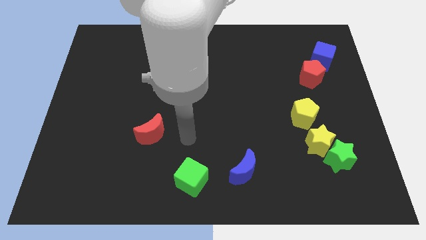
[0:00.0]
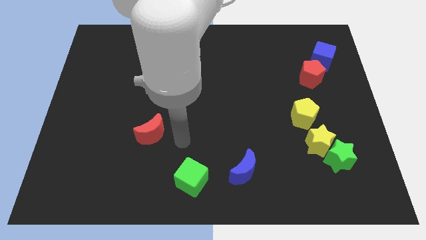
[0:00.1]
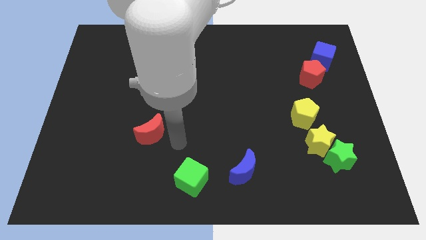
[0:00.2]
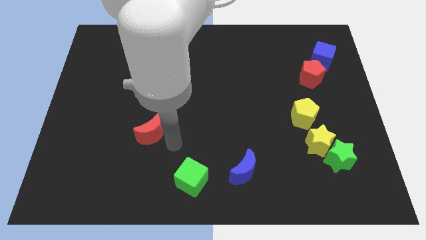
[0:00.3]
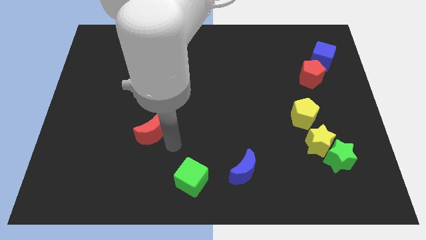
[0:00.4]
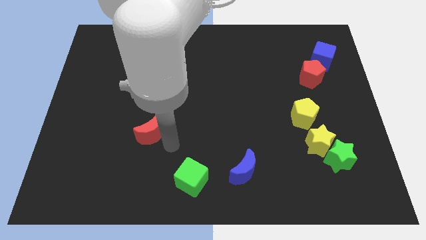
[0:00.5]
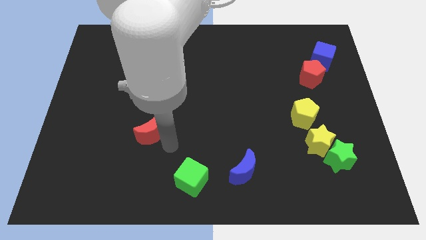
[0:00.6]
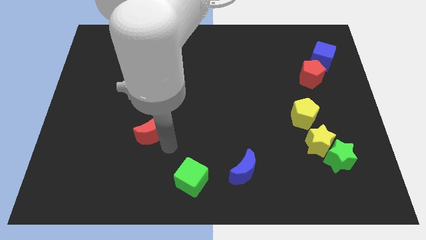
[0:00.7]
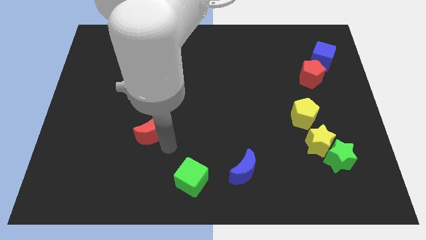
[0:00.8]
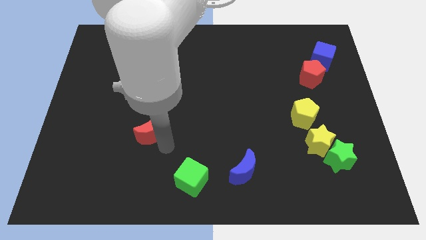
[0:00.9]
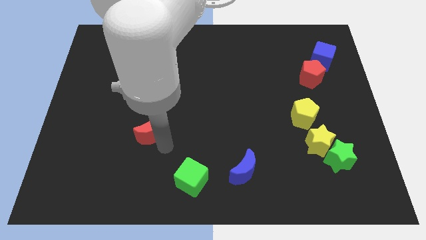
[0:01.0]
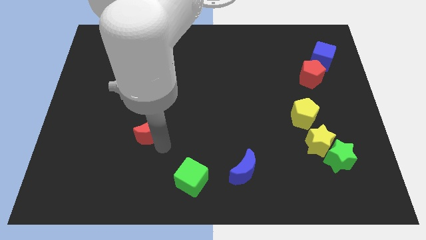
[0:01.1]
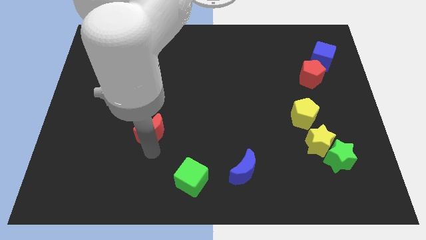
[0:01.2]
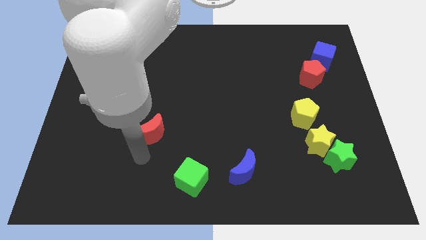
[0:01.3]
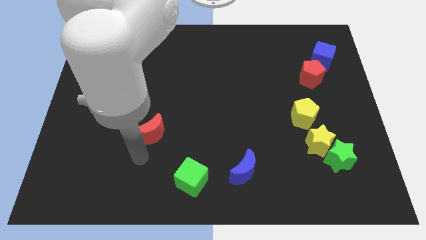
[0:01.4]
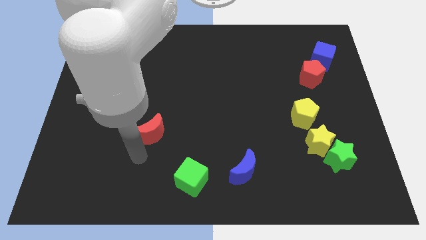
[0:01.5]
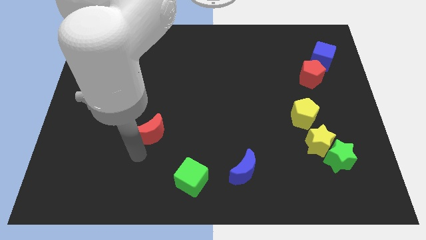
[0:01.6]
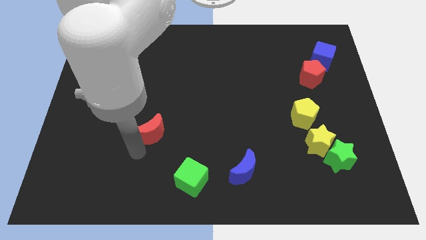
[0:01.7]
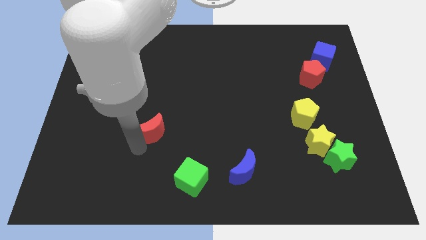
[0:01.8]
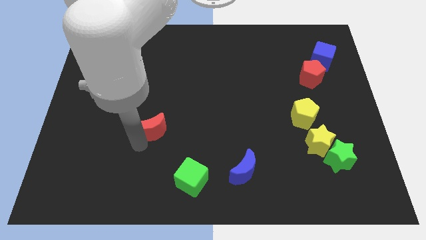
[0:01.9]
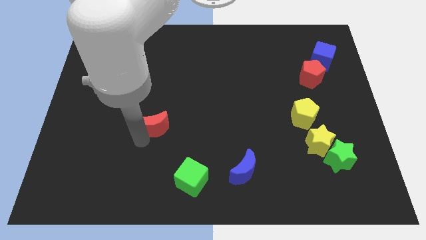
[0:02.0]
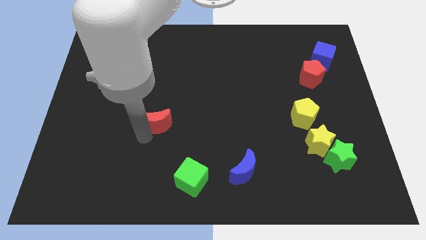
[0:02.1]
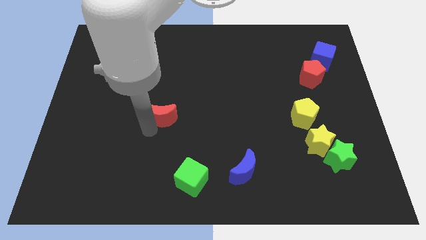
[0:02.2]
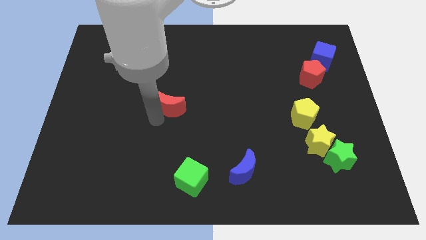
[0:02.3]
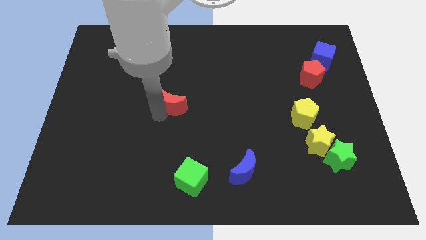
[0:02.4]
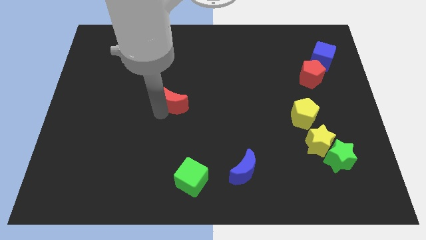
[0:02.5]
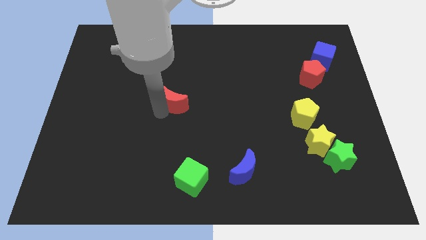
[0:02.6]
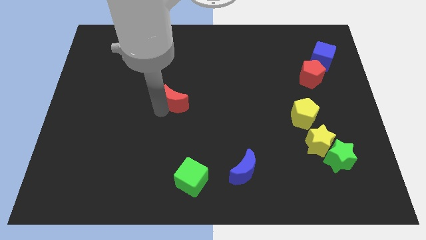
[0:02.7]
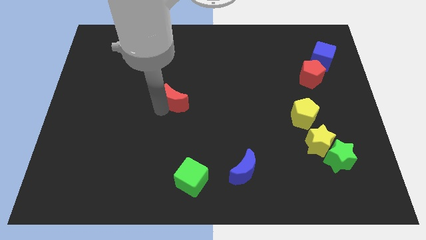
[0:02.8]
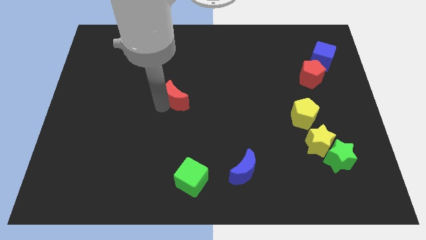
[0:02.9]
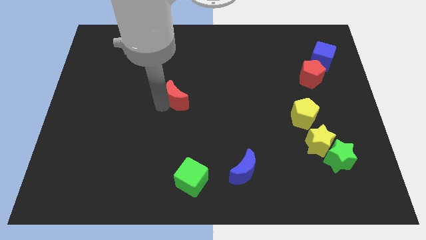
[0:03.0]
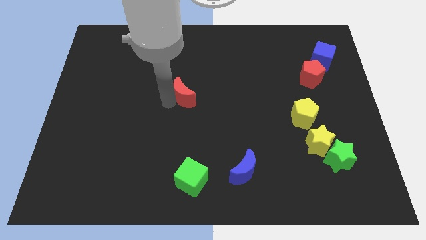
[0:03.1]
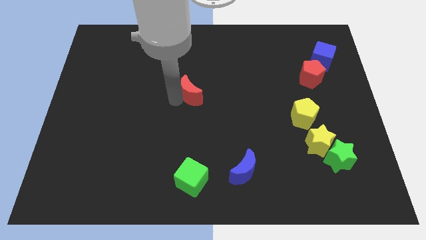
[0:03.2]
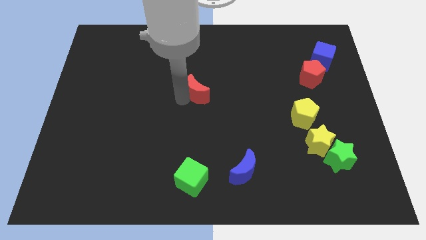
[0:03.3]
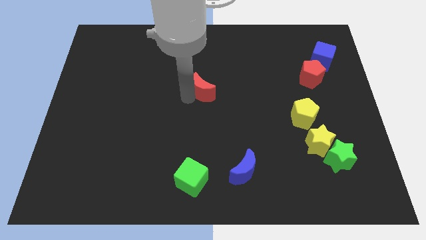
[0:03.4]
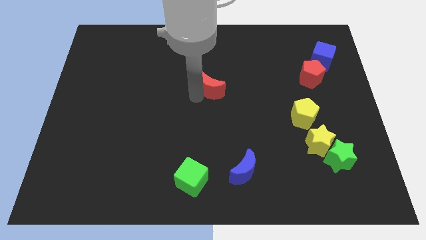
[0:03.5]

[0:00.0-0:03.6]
push the red crescent to the center of the board

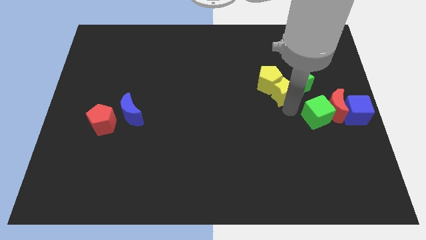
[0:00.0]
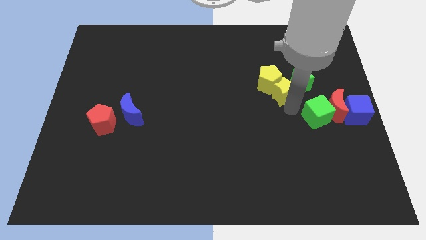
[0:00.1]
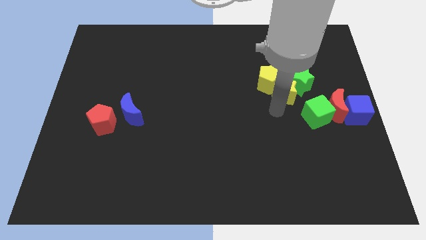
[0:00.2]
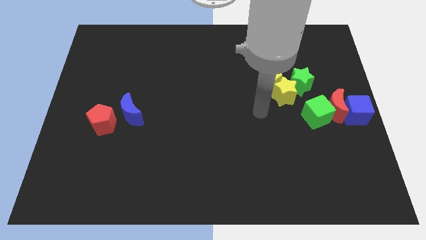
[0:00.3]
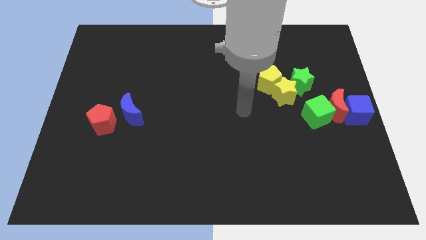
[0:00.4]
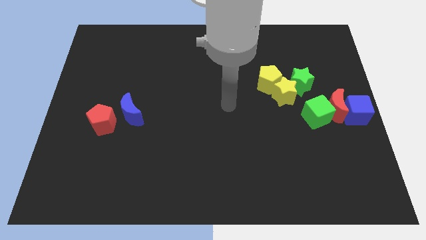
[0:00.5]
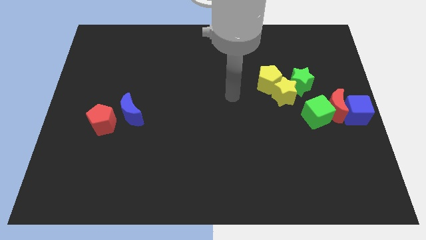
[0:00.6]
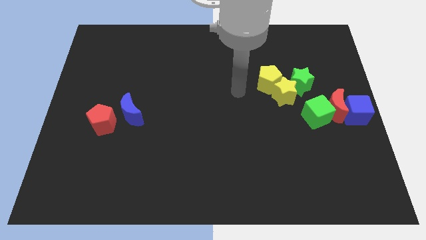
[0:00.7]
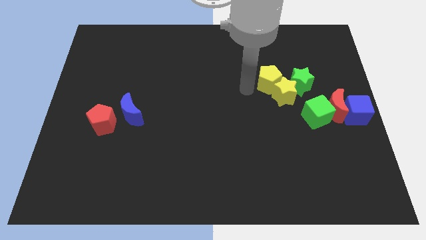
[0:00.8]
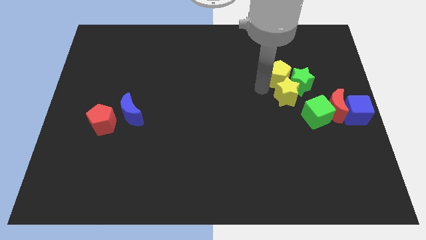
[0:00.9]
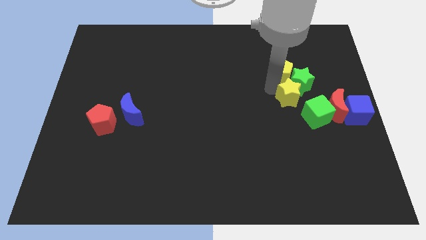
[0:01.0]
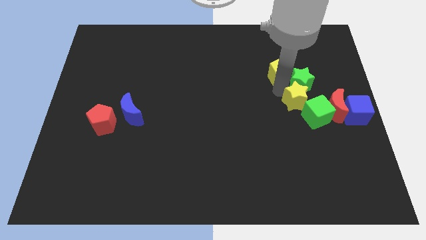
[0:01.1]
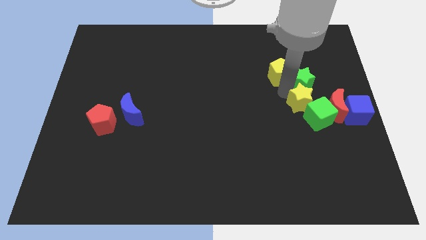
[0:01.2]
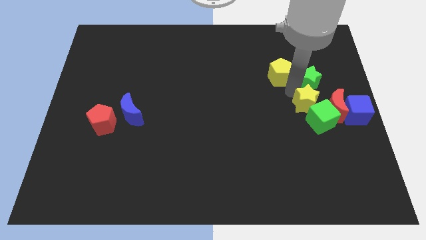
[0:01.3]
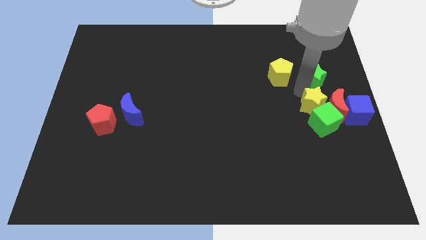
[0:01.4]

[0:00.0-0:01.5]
separate yellow star from yellow pentagon

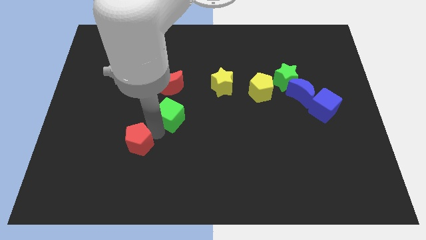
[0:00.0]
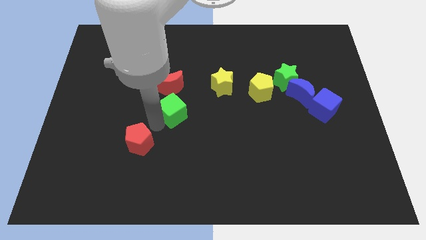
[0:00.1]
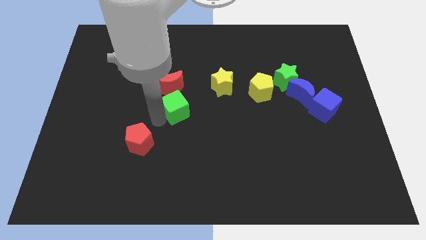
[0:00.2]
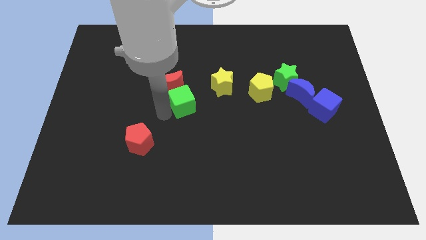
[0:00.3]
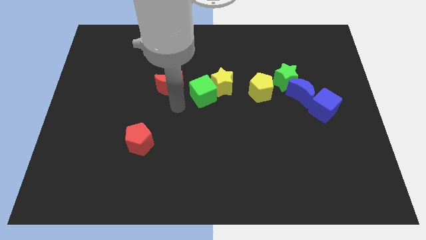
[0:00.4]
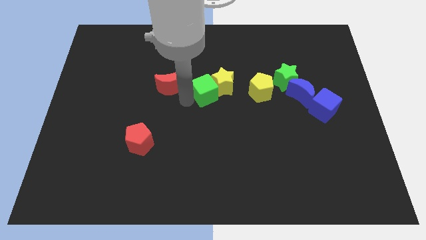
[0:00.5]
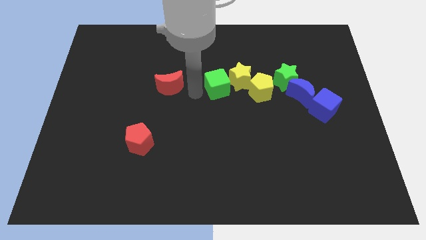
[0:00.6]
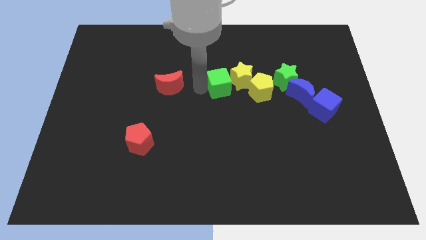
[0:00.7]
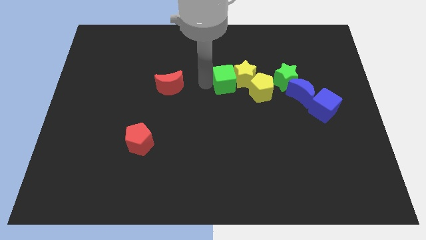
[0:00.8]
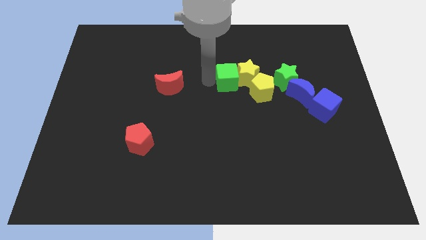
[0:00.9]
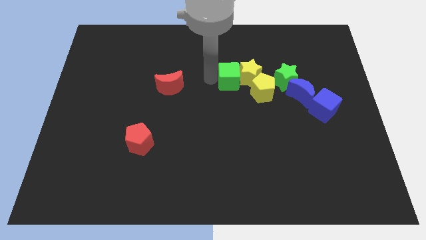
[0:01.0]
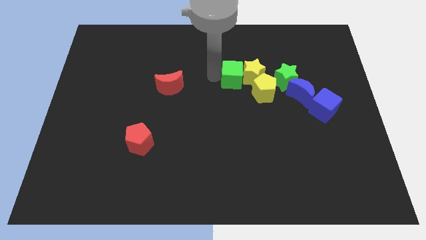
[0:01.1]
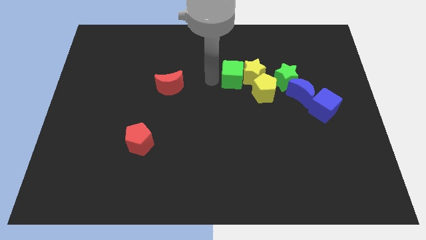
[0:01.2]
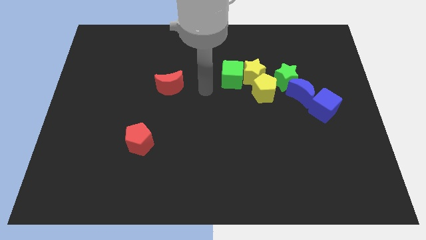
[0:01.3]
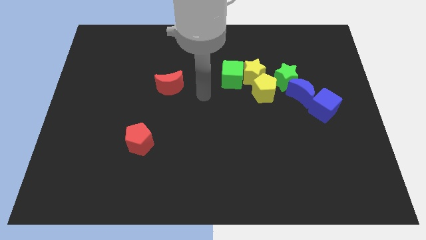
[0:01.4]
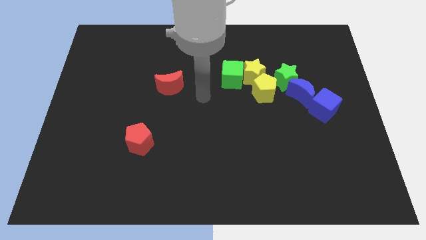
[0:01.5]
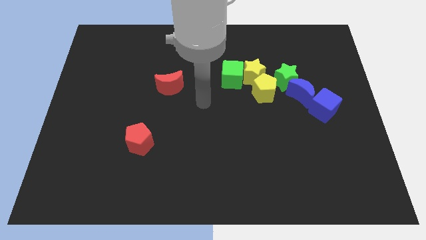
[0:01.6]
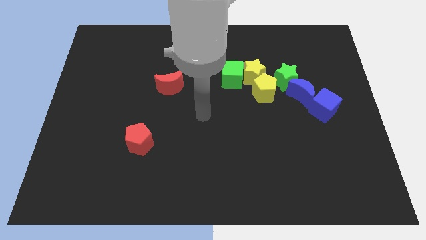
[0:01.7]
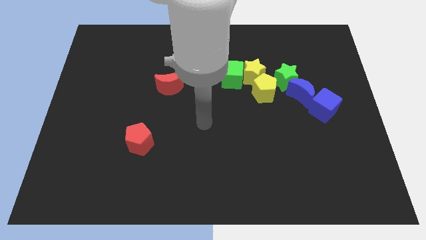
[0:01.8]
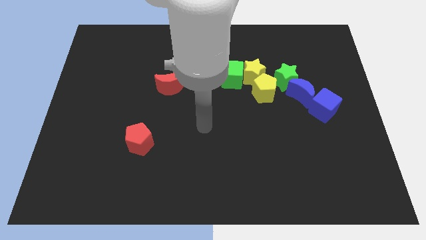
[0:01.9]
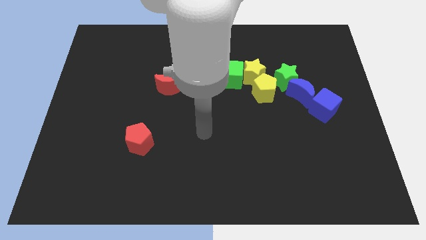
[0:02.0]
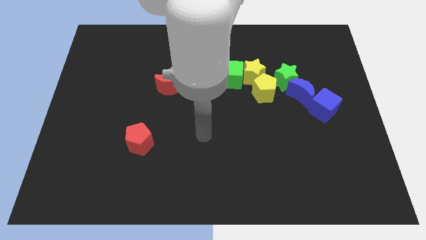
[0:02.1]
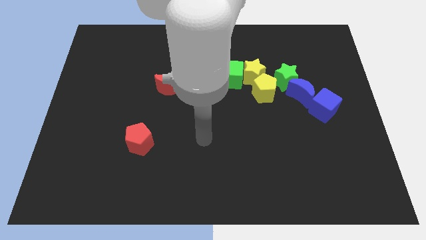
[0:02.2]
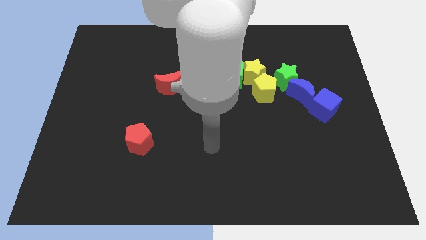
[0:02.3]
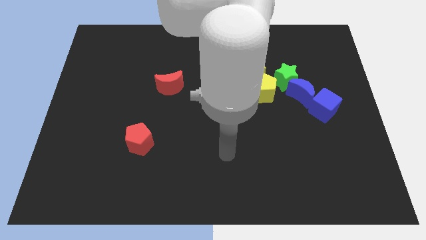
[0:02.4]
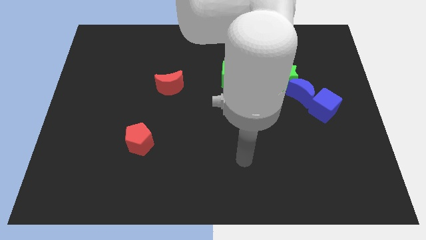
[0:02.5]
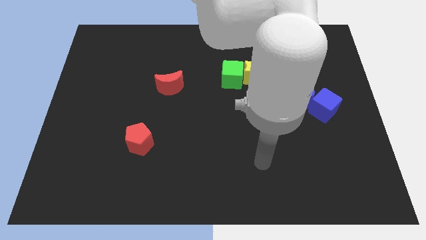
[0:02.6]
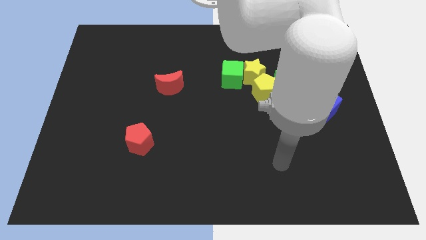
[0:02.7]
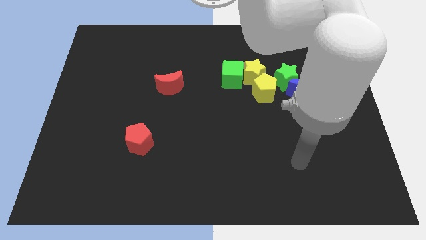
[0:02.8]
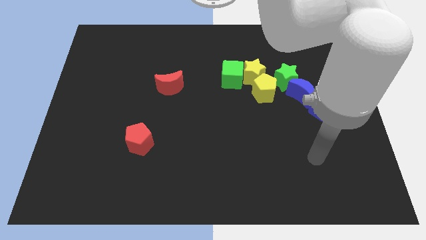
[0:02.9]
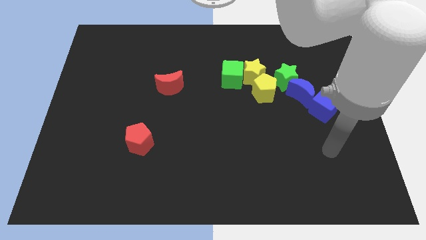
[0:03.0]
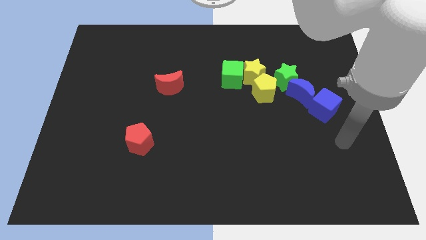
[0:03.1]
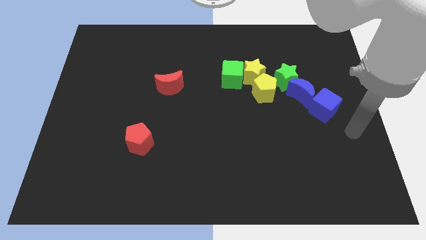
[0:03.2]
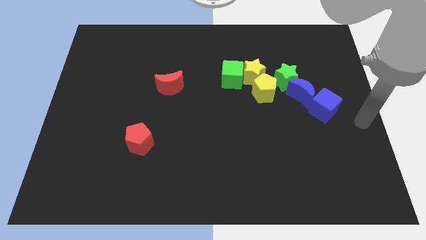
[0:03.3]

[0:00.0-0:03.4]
push the green cube into the yellow star

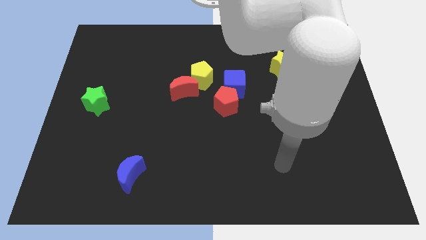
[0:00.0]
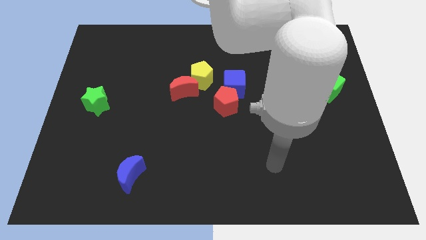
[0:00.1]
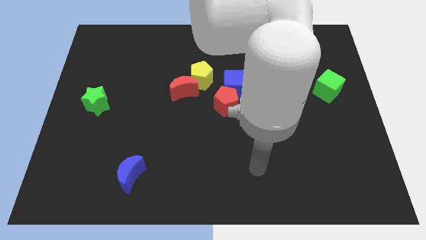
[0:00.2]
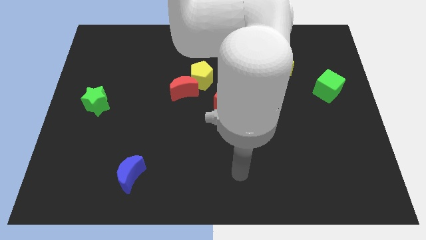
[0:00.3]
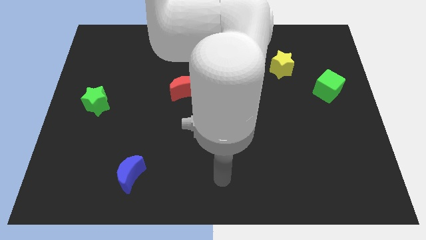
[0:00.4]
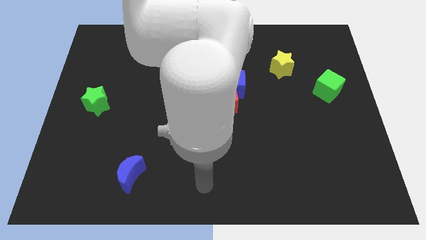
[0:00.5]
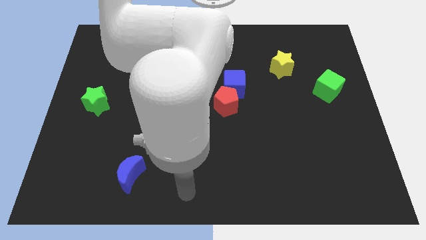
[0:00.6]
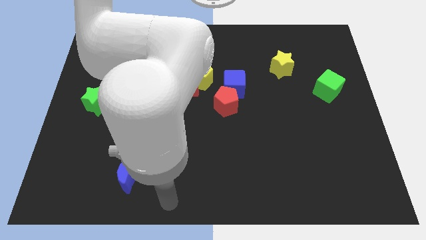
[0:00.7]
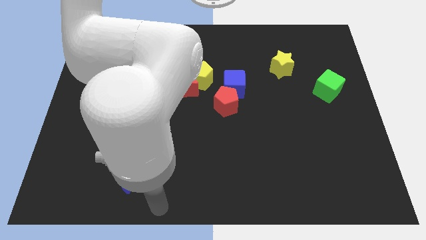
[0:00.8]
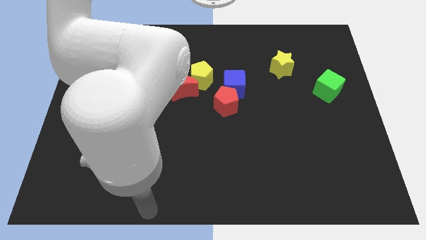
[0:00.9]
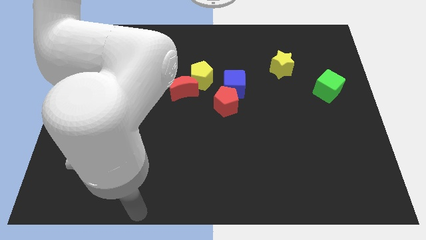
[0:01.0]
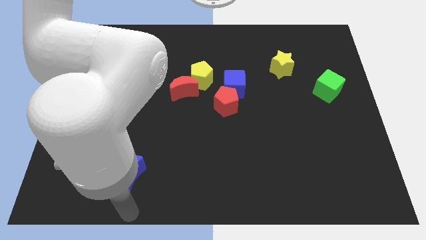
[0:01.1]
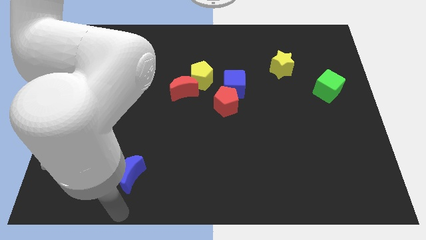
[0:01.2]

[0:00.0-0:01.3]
point your arm at the bottom of the blue crescent
